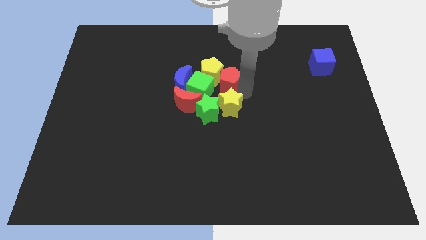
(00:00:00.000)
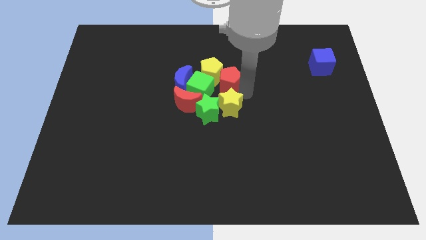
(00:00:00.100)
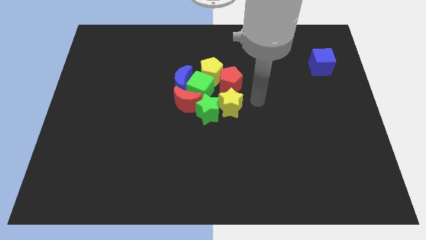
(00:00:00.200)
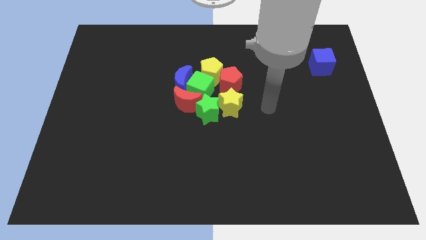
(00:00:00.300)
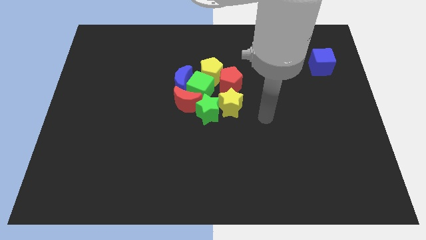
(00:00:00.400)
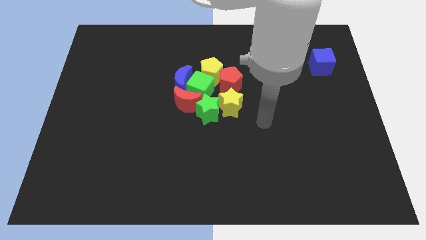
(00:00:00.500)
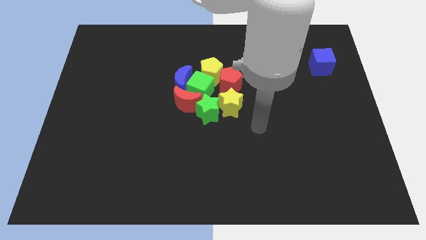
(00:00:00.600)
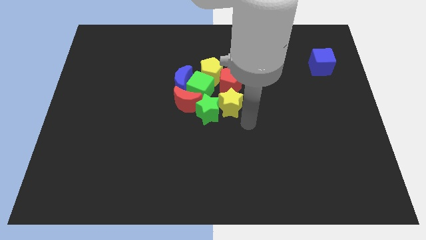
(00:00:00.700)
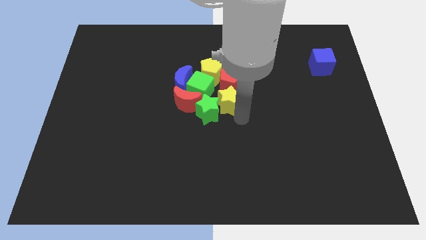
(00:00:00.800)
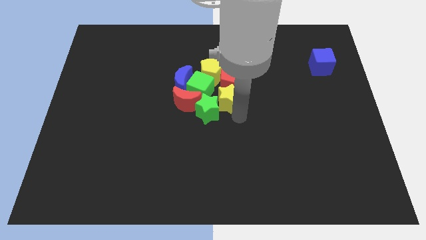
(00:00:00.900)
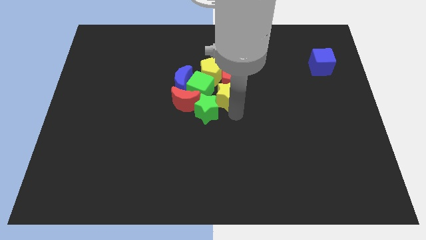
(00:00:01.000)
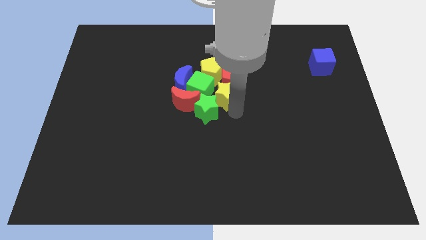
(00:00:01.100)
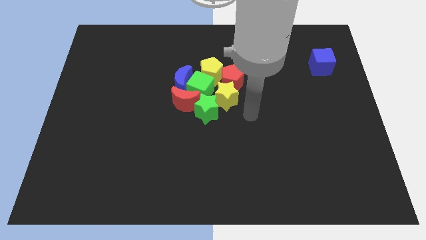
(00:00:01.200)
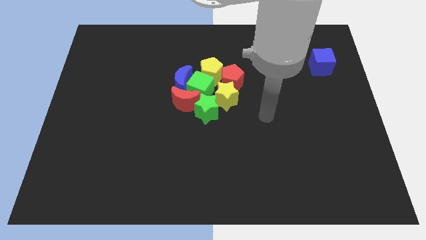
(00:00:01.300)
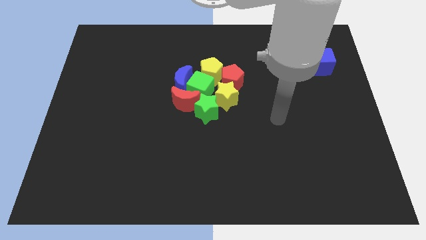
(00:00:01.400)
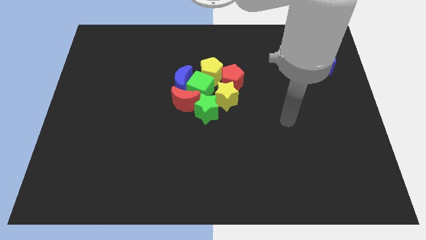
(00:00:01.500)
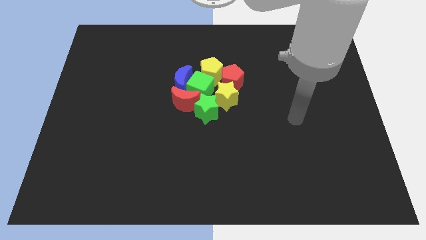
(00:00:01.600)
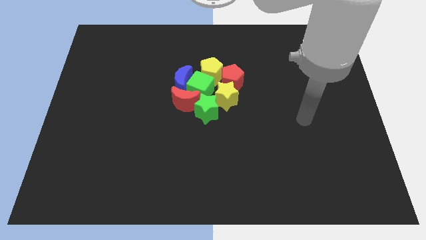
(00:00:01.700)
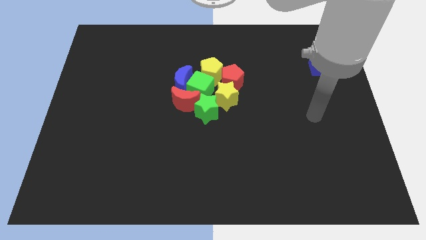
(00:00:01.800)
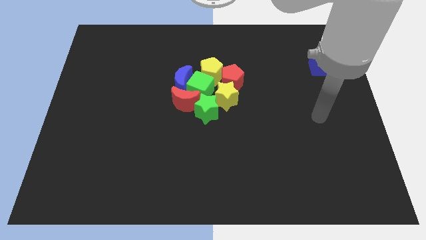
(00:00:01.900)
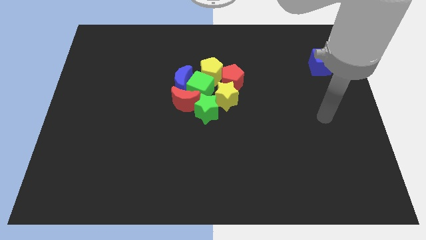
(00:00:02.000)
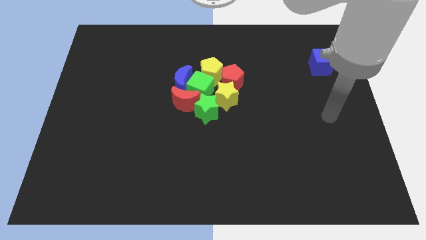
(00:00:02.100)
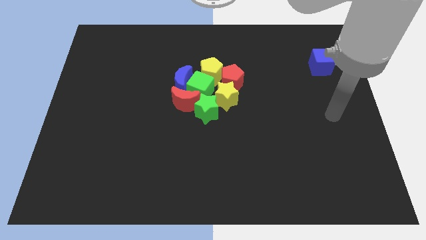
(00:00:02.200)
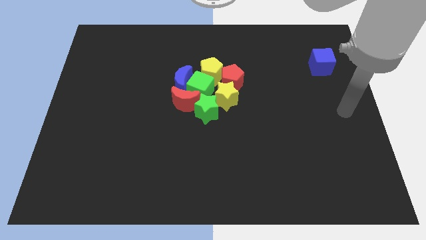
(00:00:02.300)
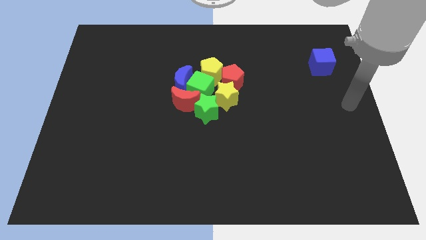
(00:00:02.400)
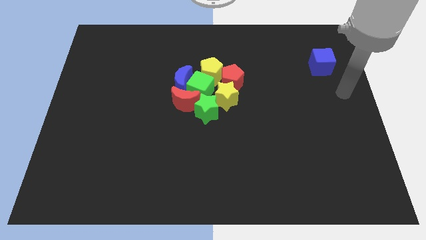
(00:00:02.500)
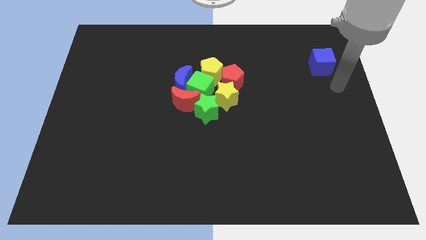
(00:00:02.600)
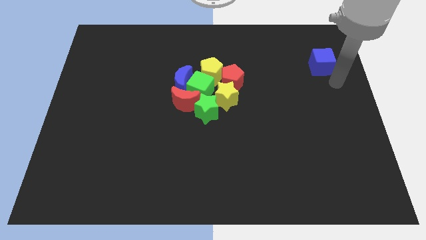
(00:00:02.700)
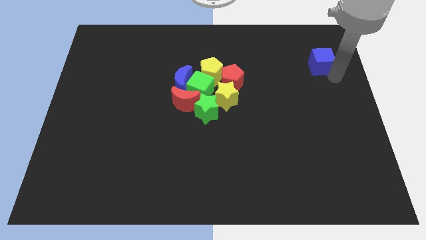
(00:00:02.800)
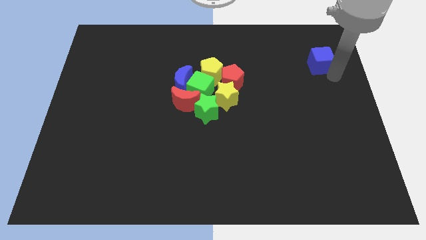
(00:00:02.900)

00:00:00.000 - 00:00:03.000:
touch the bottom of the blue cube

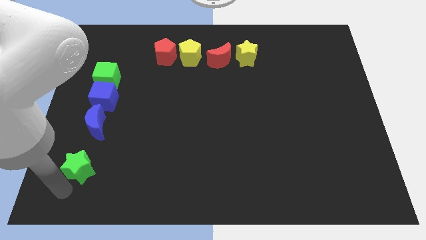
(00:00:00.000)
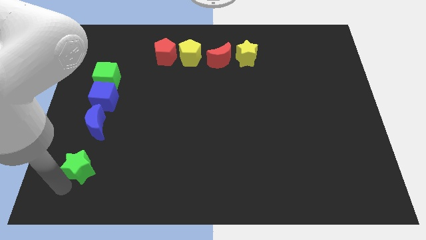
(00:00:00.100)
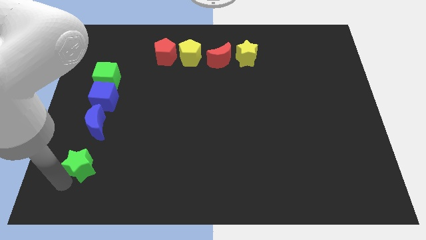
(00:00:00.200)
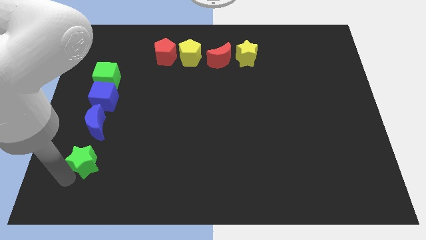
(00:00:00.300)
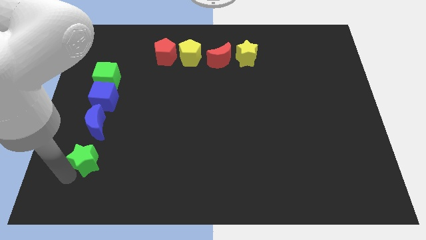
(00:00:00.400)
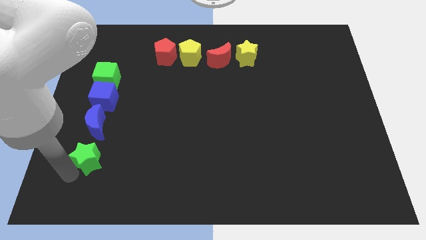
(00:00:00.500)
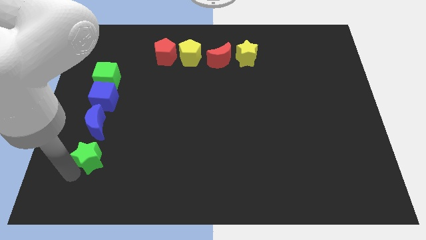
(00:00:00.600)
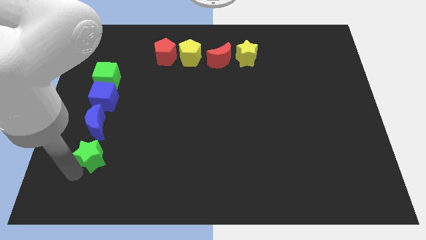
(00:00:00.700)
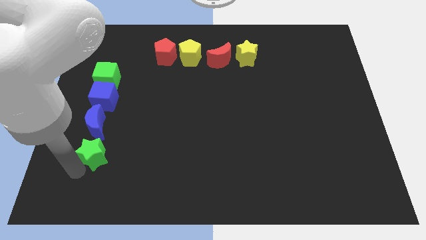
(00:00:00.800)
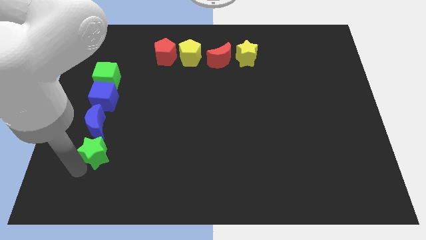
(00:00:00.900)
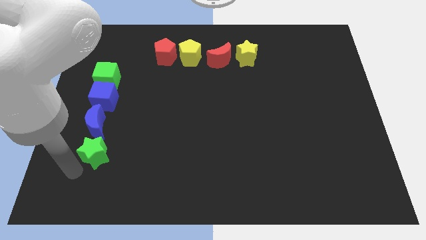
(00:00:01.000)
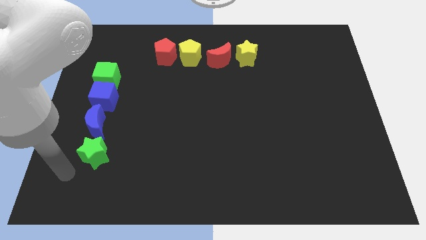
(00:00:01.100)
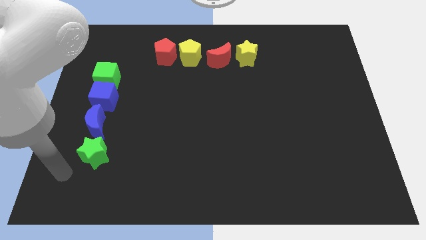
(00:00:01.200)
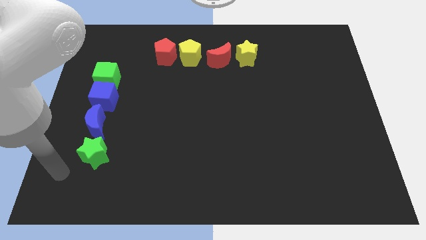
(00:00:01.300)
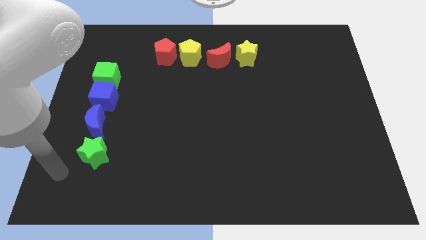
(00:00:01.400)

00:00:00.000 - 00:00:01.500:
move the green star into the blue crescent

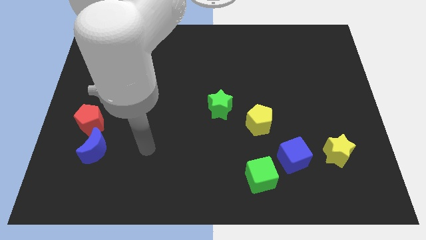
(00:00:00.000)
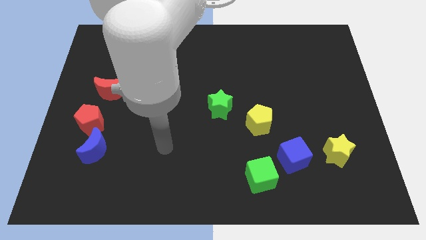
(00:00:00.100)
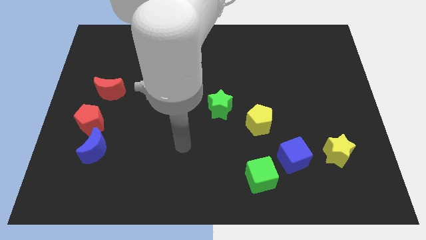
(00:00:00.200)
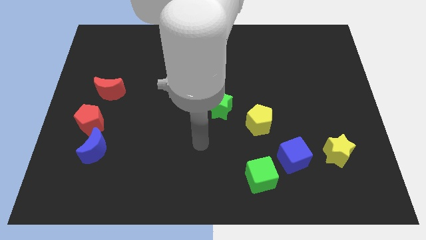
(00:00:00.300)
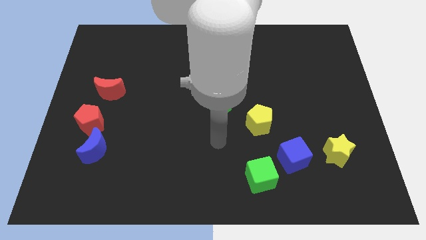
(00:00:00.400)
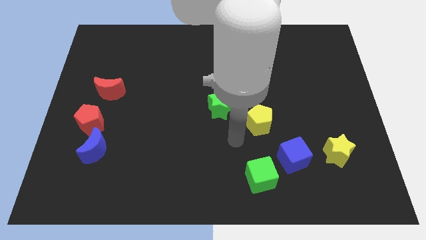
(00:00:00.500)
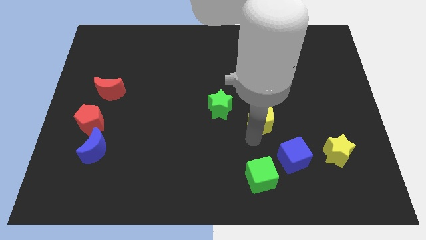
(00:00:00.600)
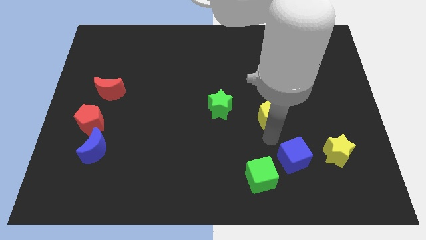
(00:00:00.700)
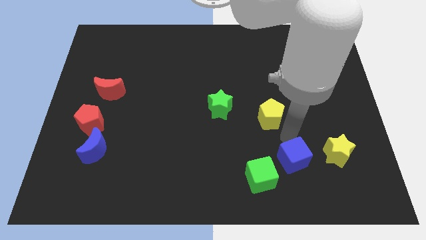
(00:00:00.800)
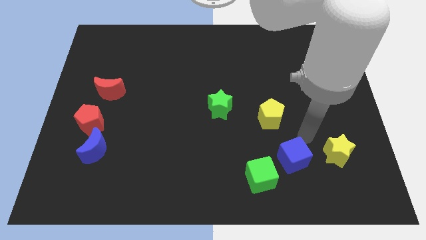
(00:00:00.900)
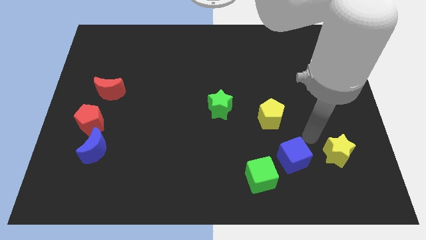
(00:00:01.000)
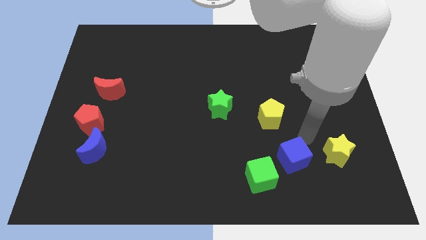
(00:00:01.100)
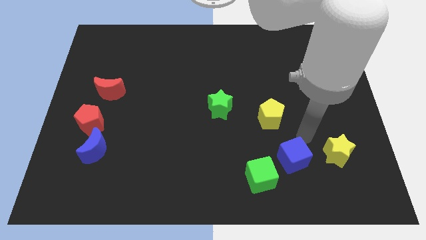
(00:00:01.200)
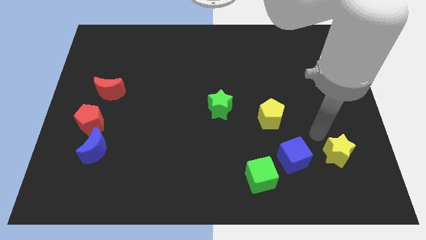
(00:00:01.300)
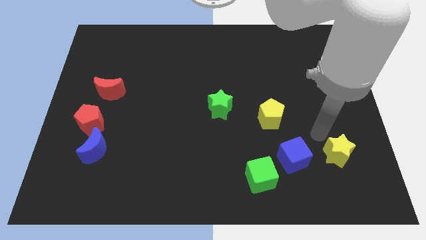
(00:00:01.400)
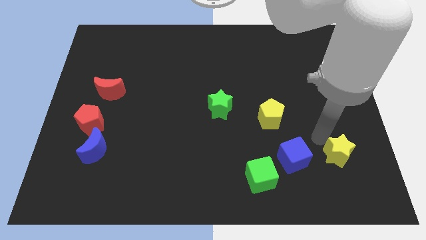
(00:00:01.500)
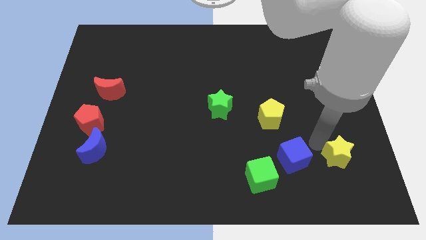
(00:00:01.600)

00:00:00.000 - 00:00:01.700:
place the arm in between the yellow star and blue cube

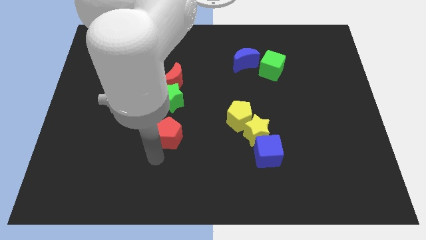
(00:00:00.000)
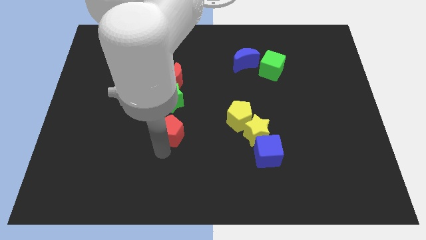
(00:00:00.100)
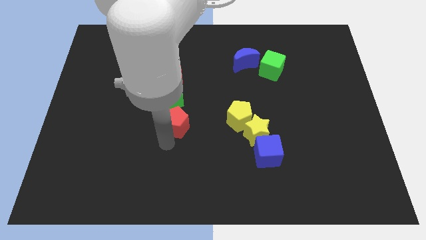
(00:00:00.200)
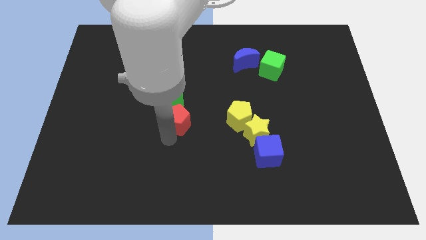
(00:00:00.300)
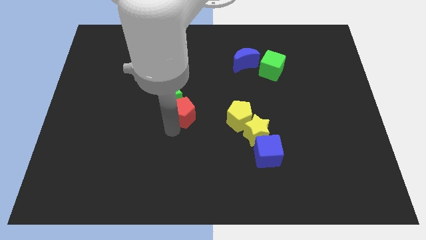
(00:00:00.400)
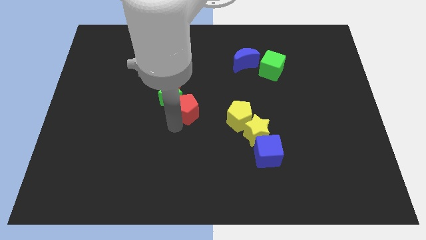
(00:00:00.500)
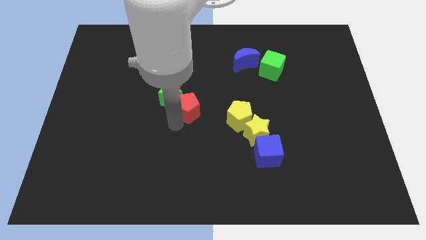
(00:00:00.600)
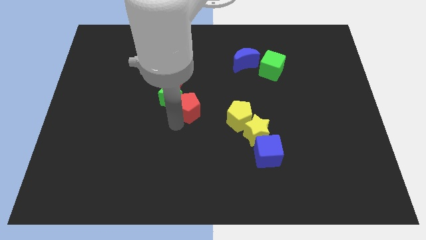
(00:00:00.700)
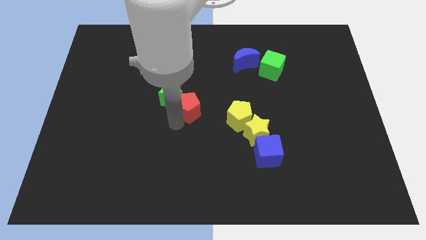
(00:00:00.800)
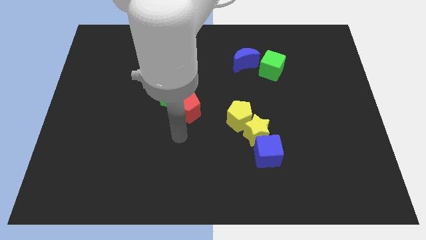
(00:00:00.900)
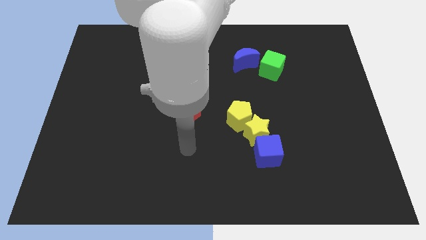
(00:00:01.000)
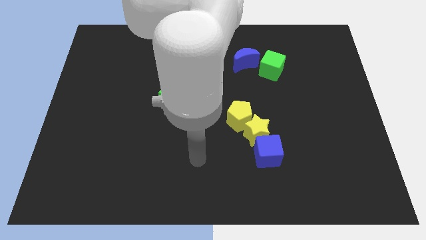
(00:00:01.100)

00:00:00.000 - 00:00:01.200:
place red pentagon below green star

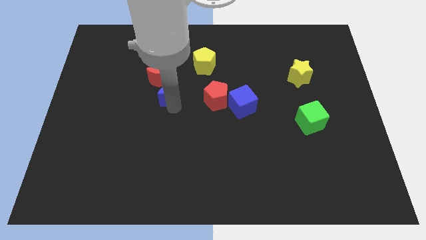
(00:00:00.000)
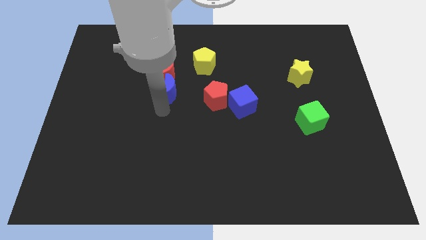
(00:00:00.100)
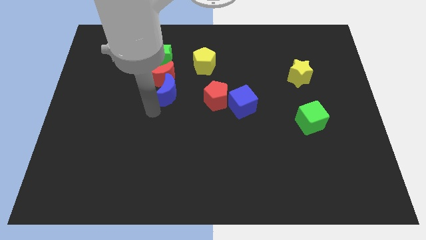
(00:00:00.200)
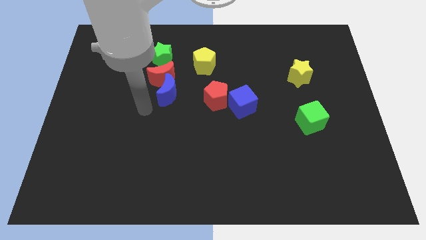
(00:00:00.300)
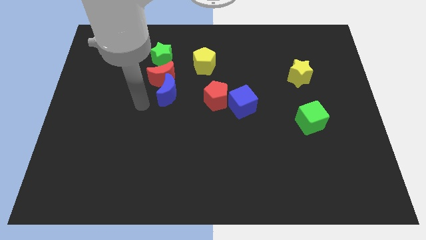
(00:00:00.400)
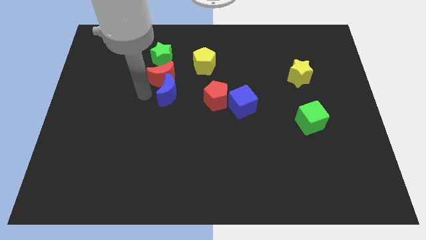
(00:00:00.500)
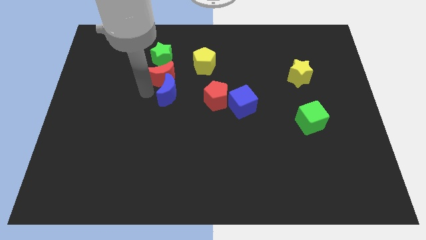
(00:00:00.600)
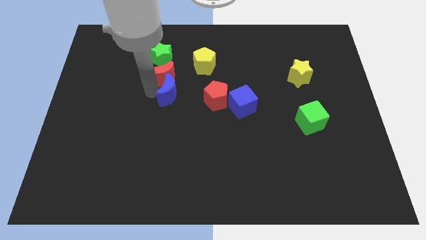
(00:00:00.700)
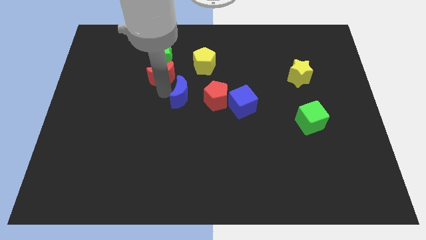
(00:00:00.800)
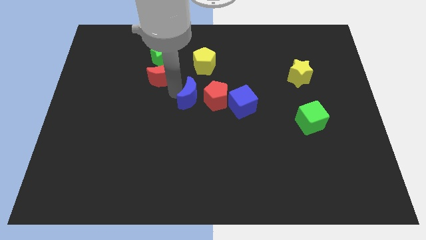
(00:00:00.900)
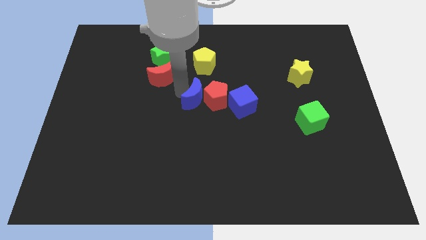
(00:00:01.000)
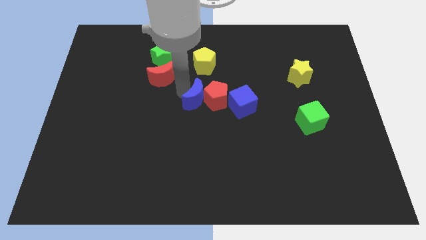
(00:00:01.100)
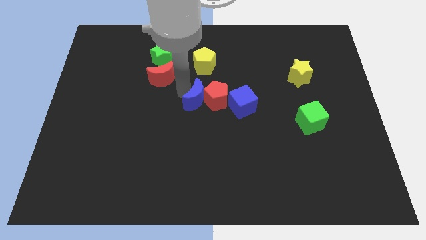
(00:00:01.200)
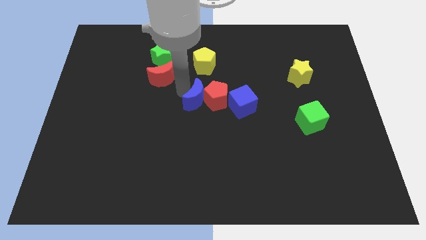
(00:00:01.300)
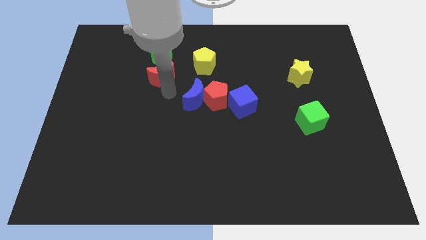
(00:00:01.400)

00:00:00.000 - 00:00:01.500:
push the blue crescent to the left of the red pentagon
